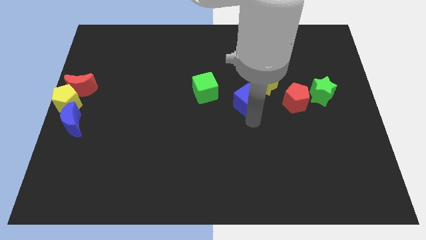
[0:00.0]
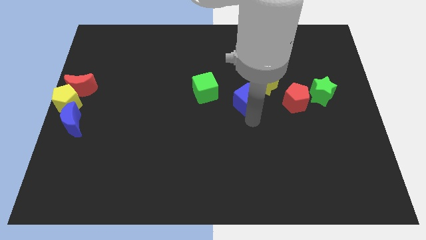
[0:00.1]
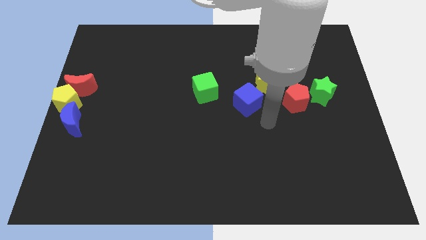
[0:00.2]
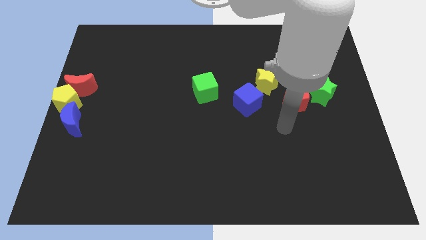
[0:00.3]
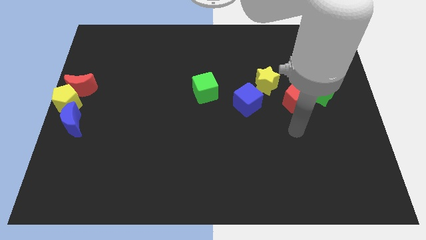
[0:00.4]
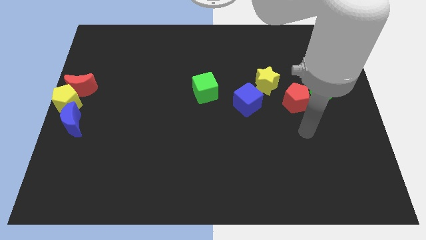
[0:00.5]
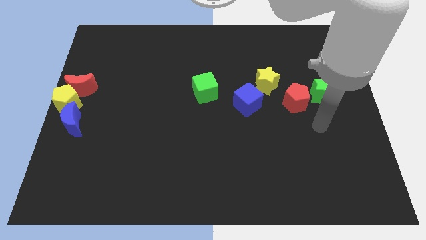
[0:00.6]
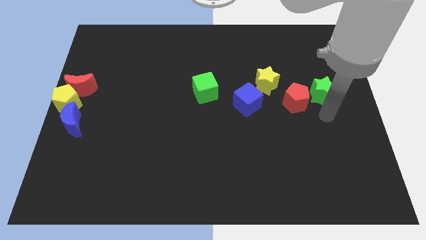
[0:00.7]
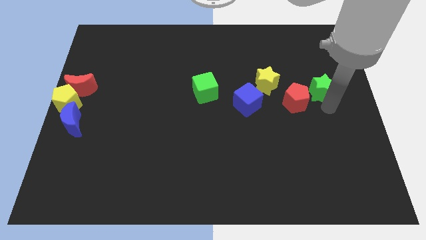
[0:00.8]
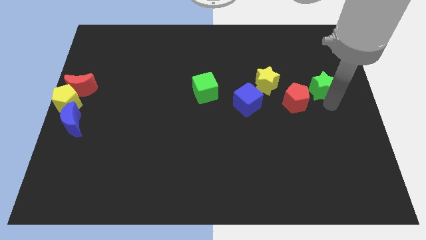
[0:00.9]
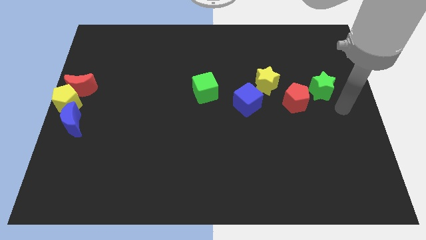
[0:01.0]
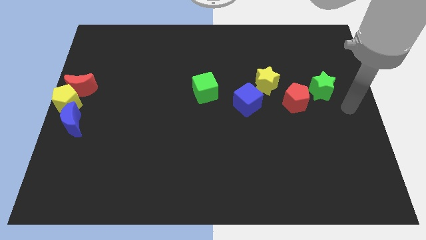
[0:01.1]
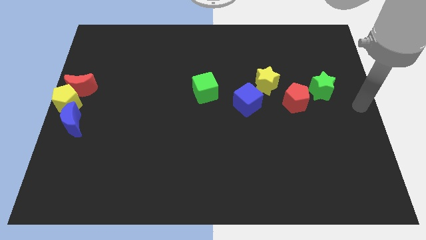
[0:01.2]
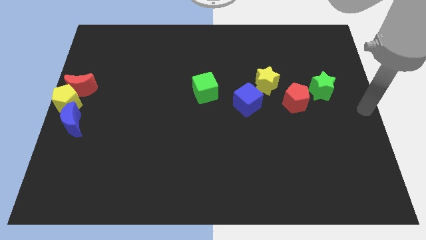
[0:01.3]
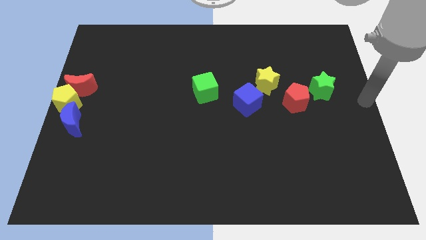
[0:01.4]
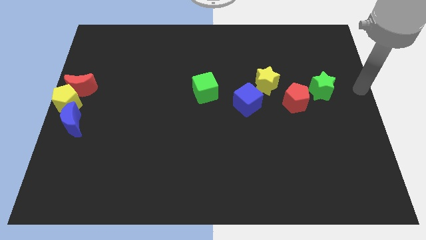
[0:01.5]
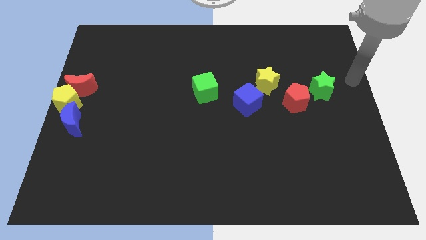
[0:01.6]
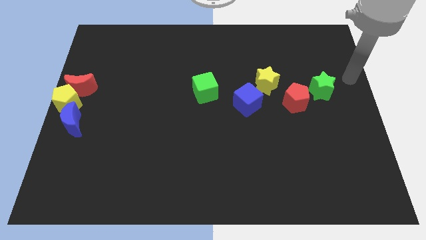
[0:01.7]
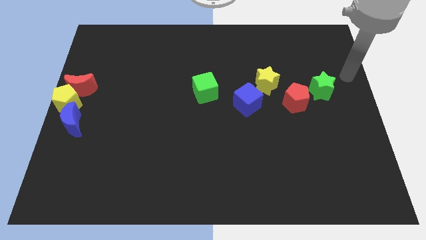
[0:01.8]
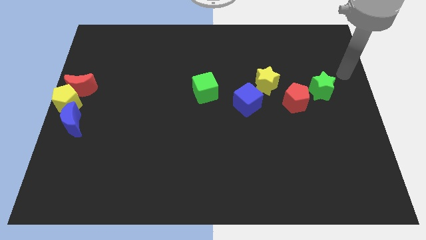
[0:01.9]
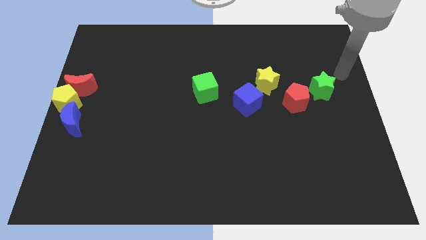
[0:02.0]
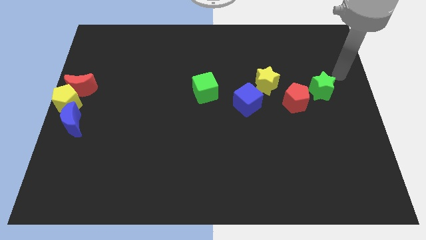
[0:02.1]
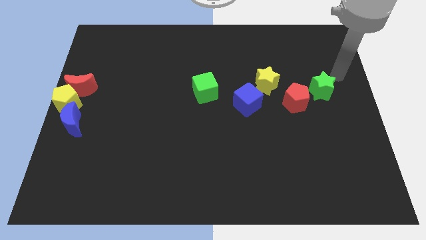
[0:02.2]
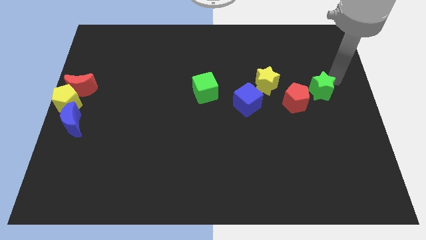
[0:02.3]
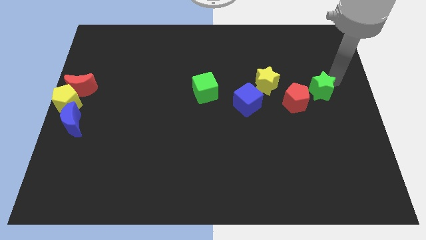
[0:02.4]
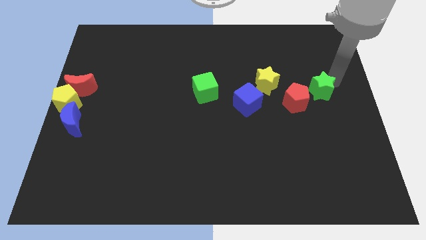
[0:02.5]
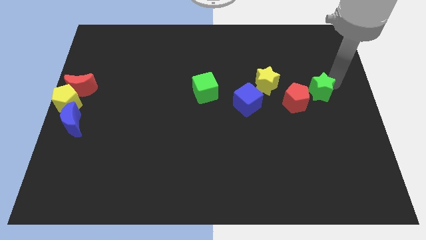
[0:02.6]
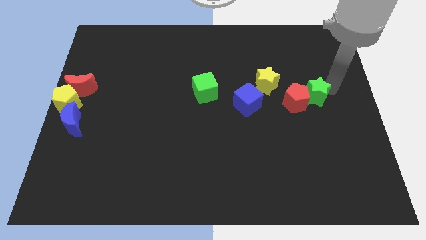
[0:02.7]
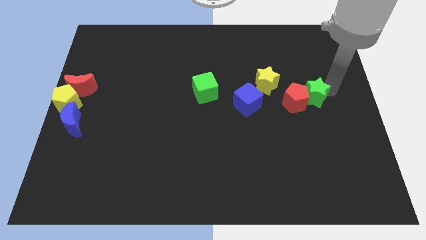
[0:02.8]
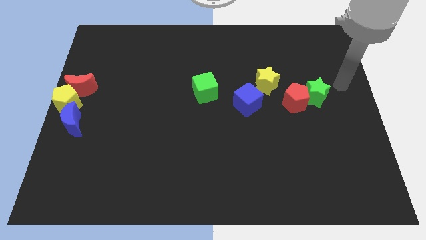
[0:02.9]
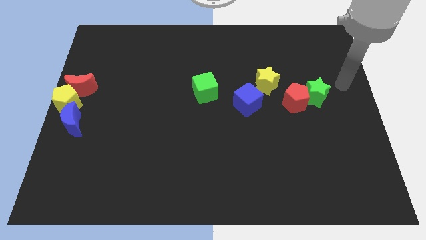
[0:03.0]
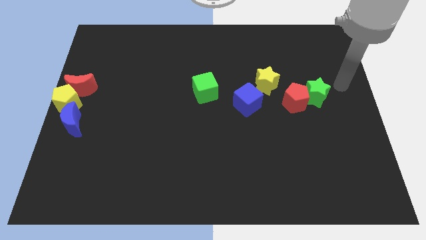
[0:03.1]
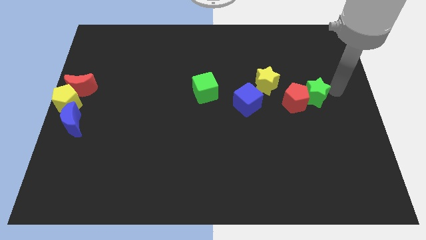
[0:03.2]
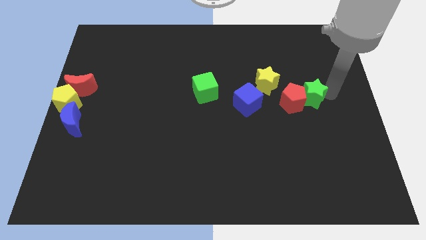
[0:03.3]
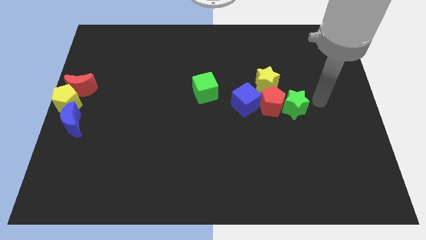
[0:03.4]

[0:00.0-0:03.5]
push the green star into red pentagon

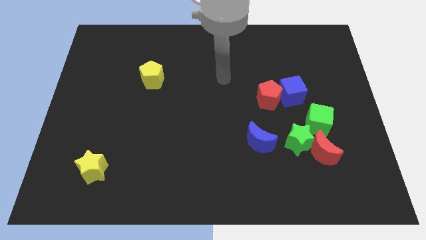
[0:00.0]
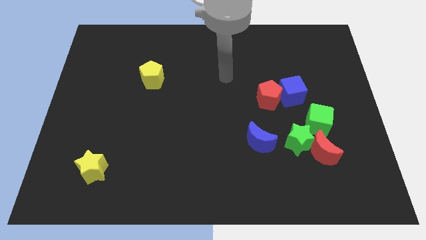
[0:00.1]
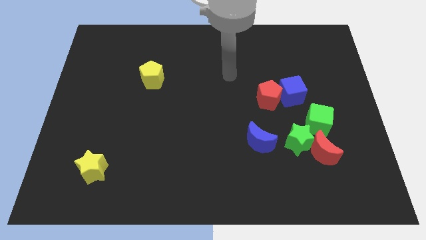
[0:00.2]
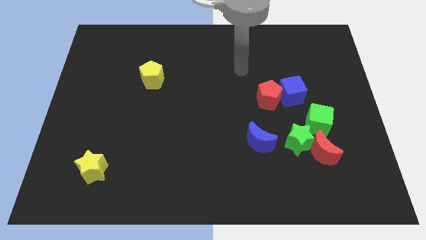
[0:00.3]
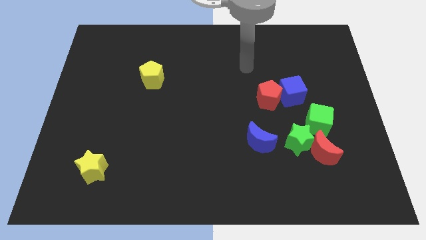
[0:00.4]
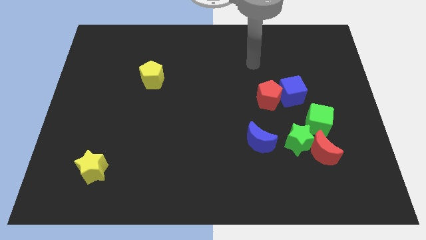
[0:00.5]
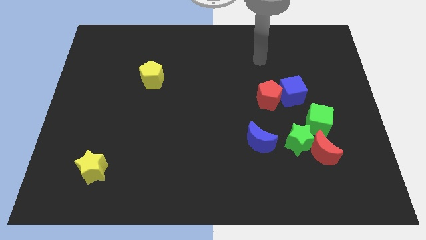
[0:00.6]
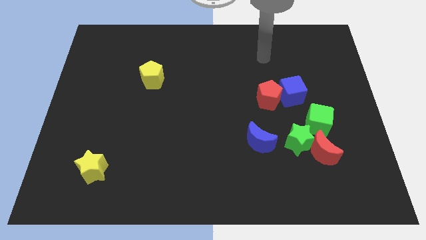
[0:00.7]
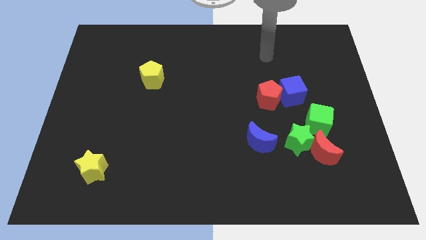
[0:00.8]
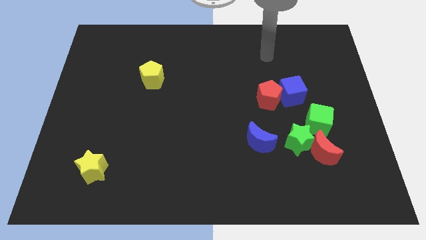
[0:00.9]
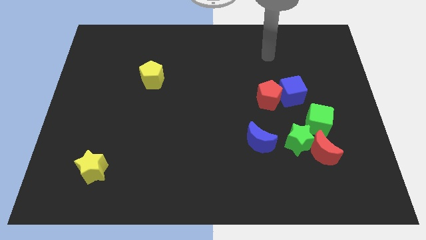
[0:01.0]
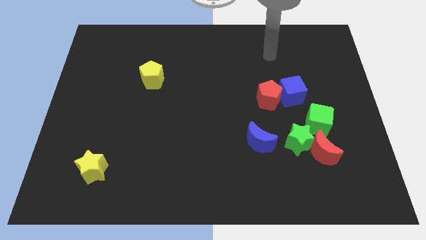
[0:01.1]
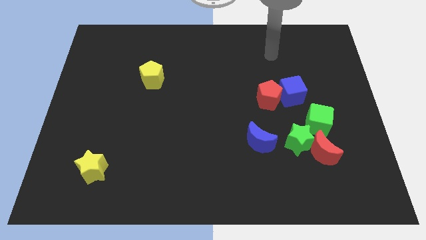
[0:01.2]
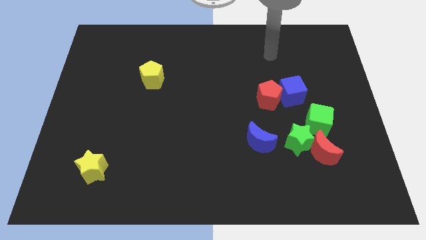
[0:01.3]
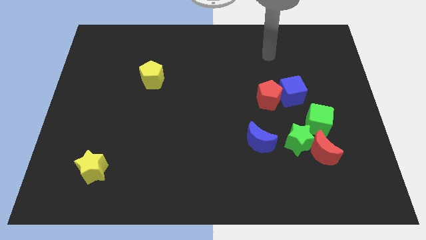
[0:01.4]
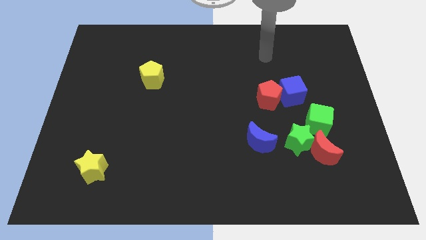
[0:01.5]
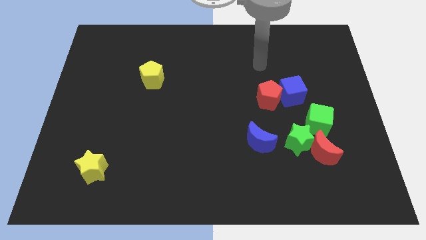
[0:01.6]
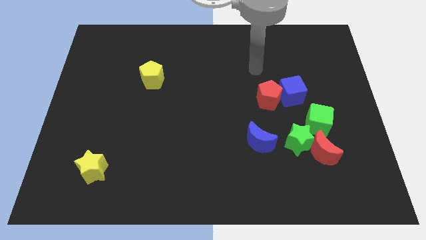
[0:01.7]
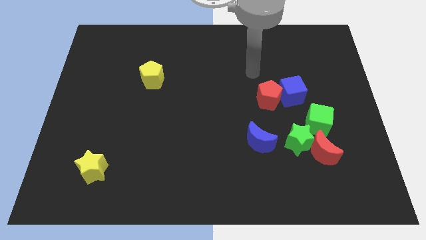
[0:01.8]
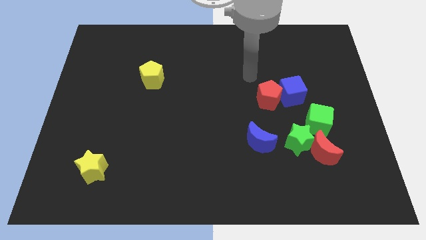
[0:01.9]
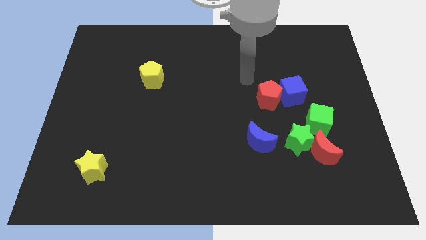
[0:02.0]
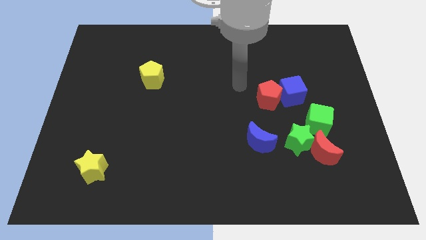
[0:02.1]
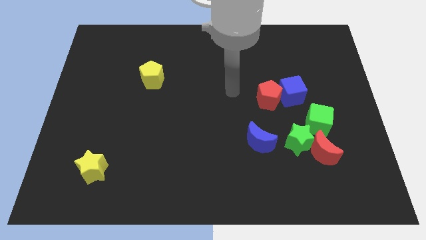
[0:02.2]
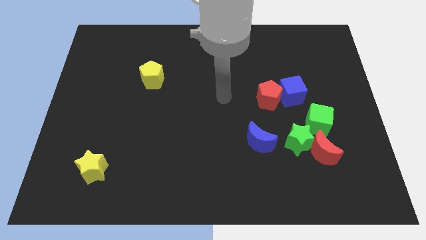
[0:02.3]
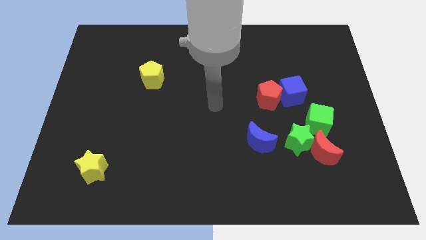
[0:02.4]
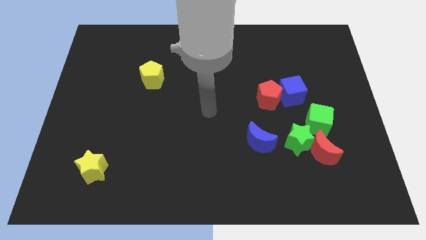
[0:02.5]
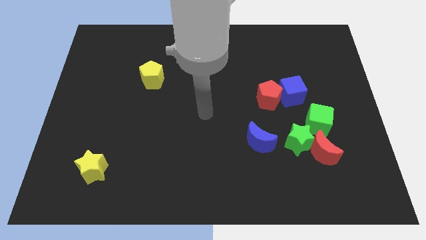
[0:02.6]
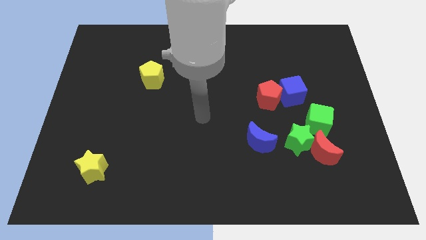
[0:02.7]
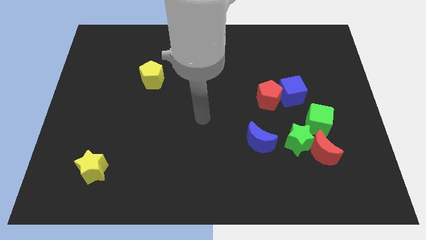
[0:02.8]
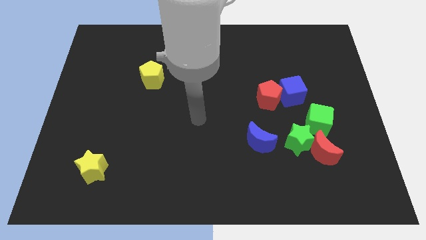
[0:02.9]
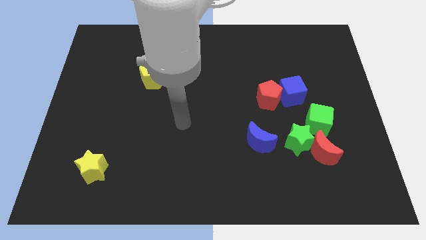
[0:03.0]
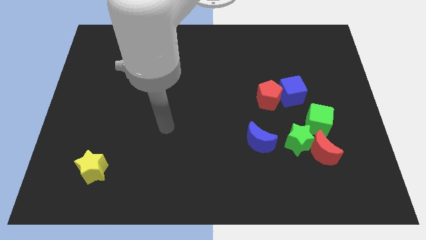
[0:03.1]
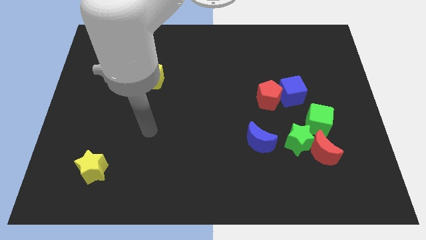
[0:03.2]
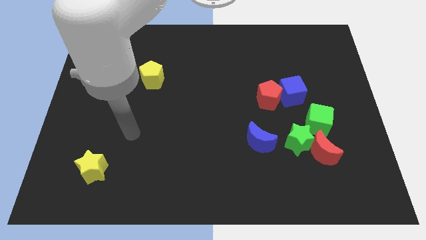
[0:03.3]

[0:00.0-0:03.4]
move your arm to the bottom side of the yellow pentagon

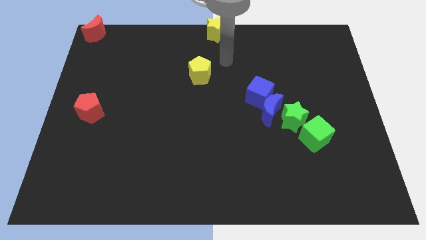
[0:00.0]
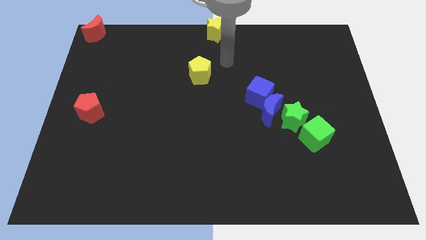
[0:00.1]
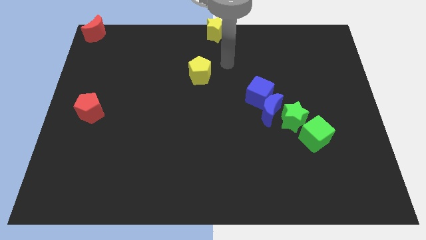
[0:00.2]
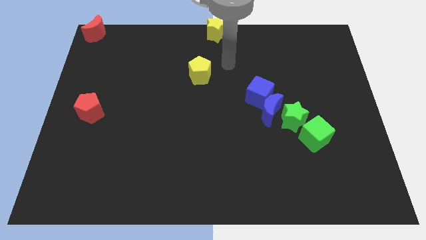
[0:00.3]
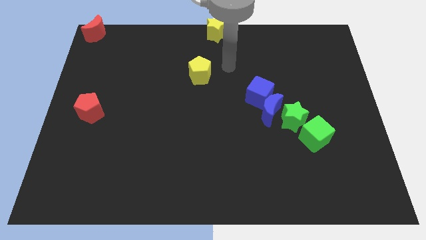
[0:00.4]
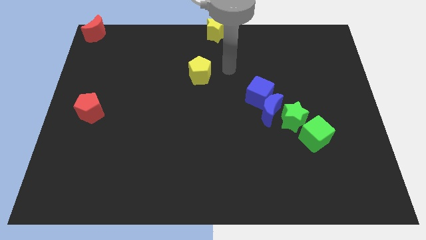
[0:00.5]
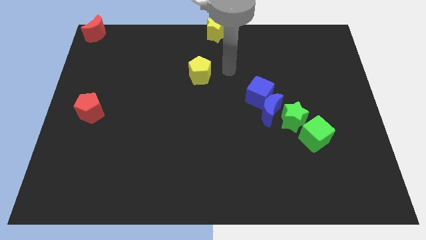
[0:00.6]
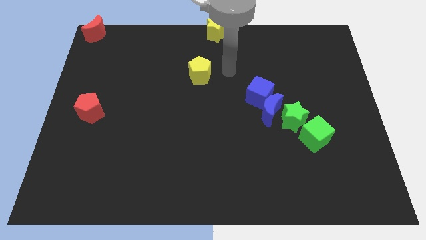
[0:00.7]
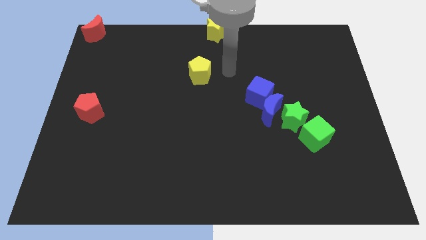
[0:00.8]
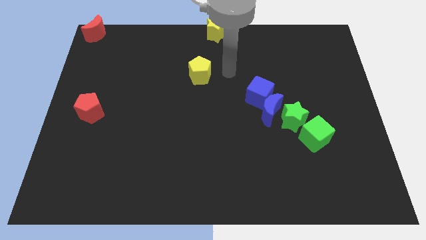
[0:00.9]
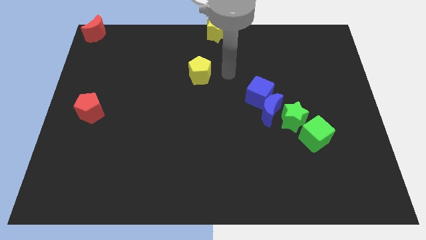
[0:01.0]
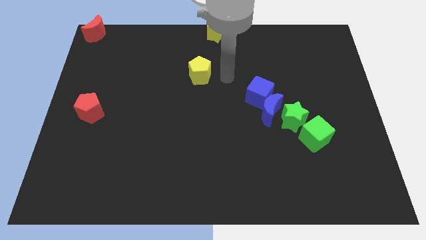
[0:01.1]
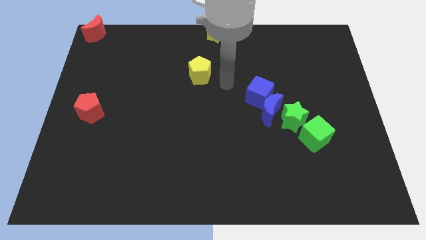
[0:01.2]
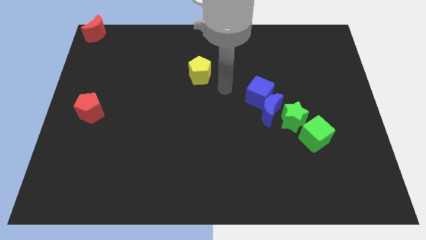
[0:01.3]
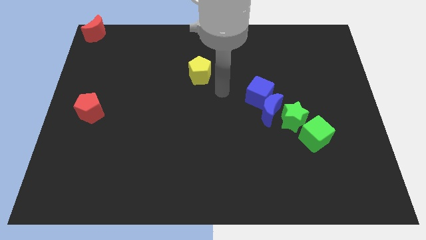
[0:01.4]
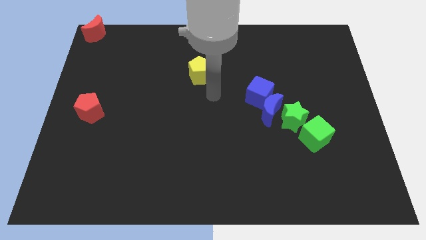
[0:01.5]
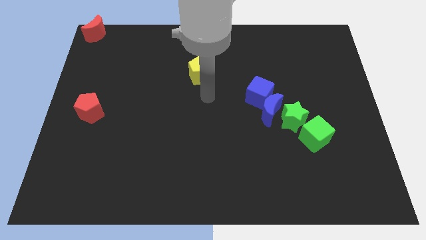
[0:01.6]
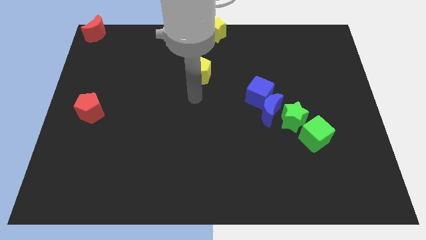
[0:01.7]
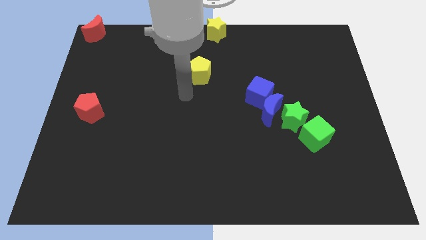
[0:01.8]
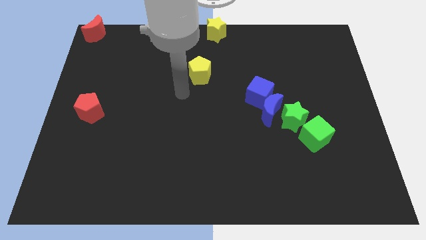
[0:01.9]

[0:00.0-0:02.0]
place your arm to the left of the yellow pentagon
